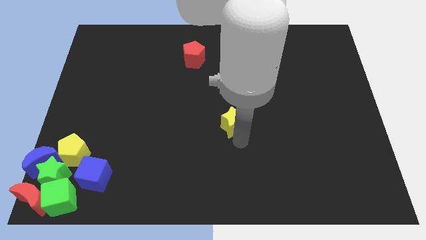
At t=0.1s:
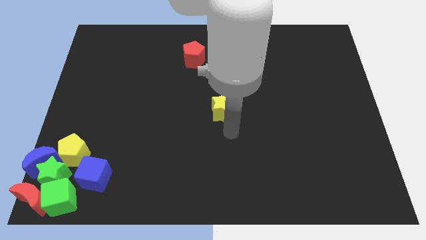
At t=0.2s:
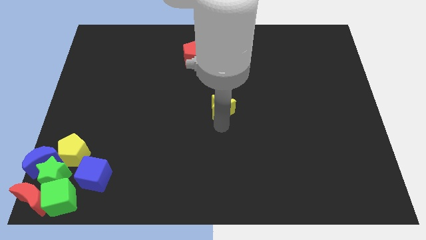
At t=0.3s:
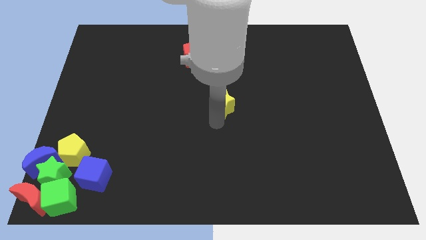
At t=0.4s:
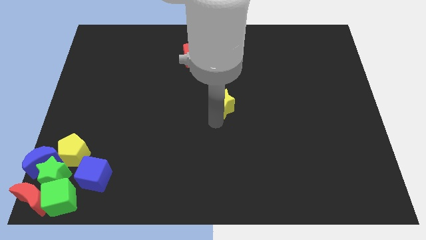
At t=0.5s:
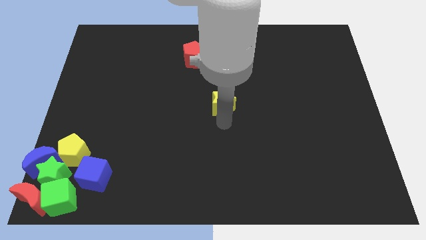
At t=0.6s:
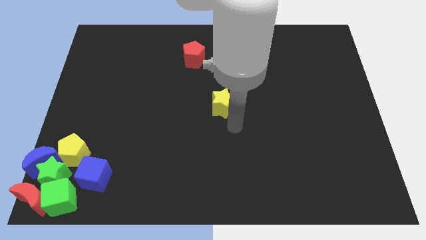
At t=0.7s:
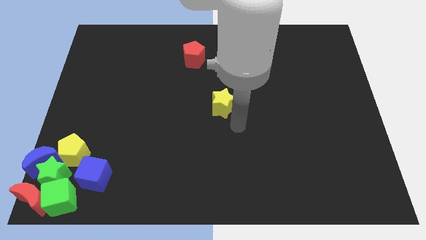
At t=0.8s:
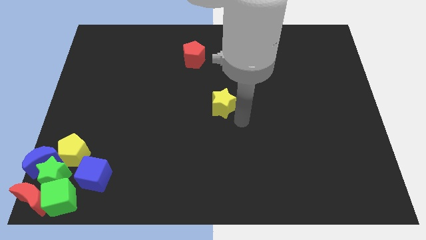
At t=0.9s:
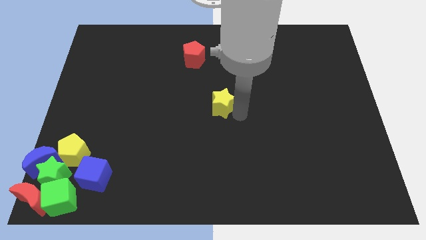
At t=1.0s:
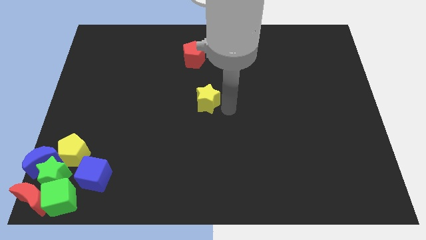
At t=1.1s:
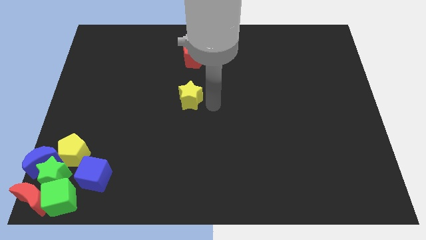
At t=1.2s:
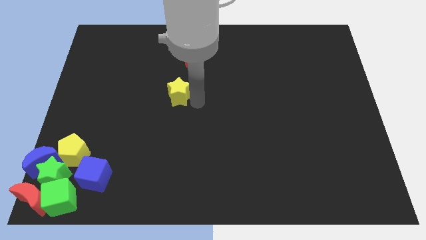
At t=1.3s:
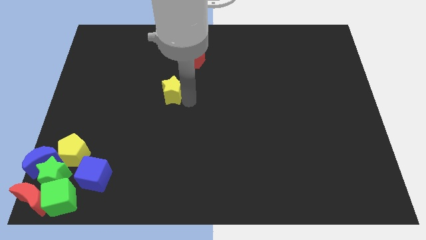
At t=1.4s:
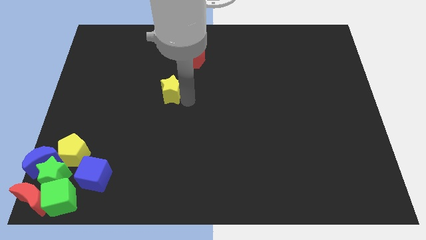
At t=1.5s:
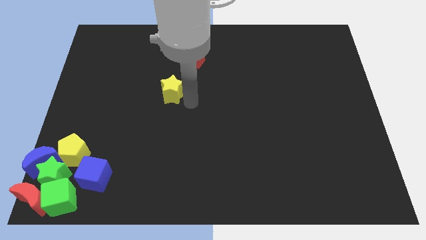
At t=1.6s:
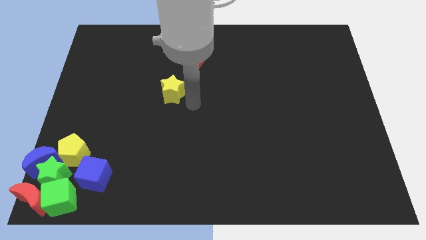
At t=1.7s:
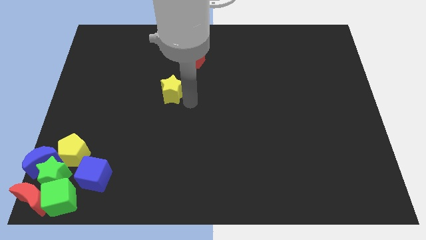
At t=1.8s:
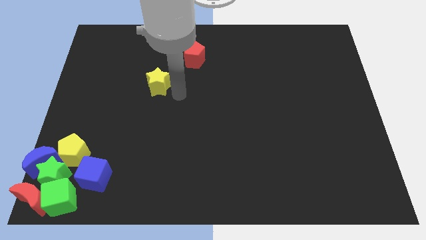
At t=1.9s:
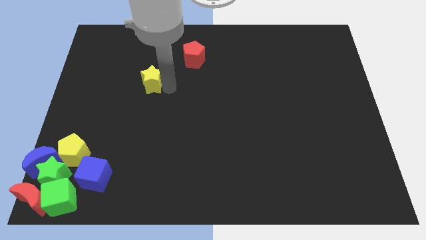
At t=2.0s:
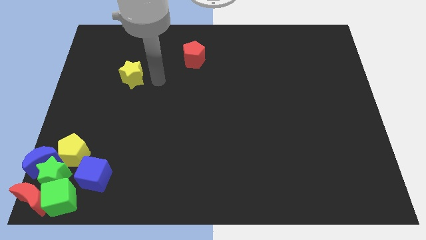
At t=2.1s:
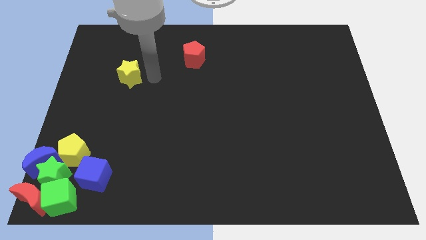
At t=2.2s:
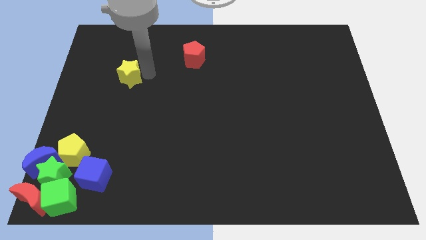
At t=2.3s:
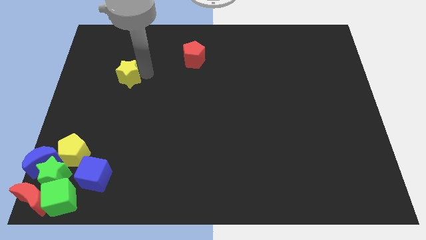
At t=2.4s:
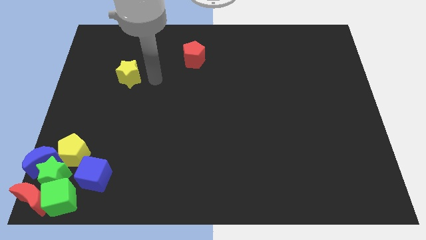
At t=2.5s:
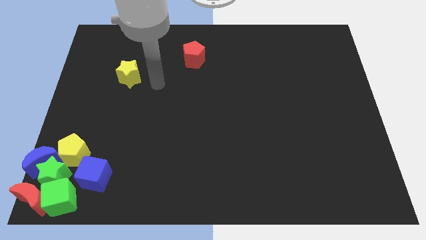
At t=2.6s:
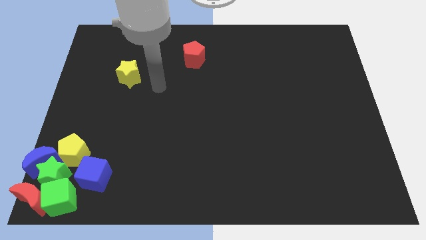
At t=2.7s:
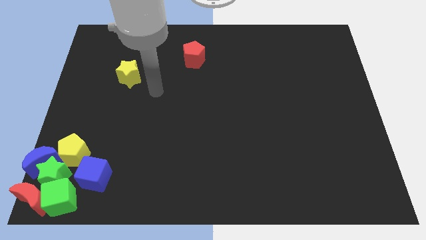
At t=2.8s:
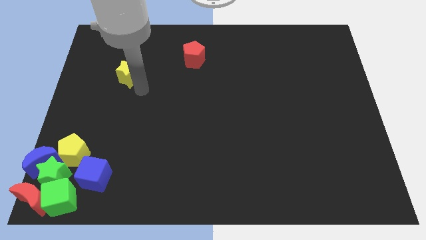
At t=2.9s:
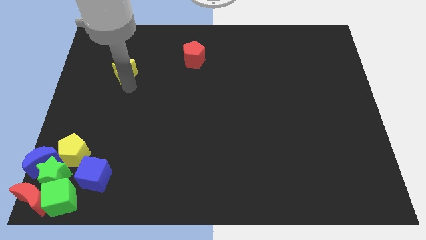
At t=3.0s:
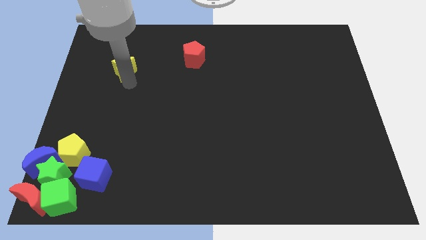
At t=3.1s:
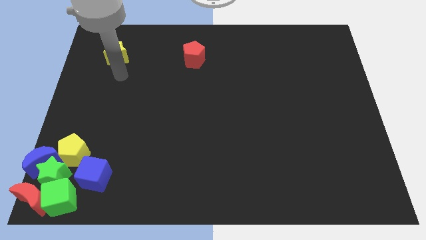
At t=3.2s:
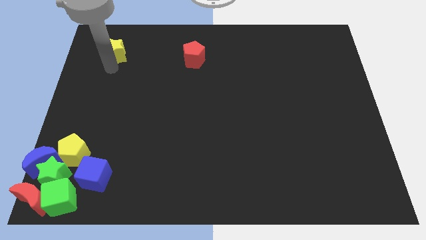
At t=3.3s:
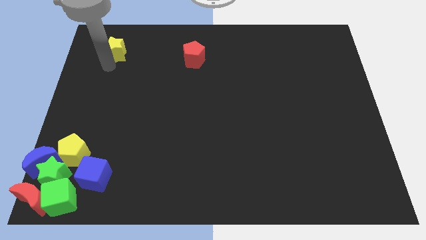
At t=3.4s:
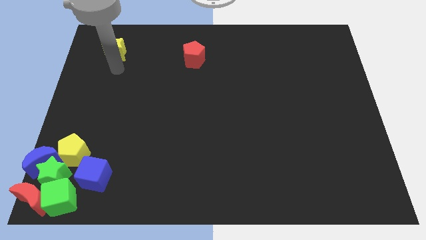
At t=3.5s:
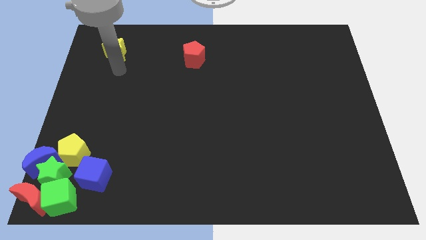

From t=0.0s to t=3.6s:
move the yellow star left to the red pentagon

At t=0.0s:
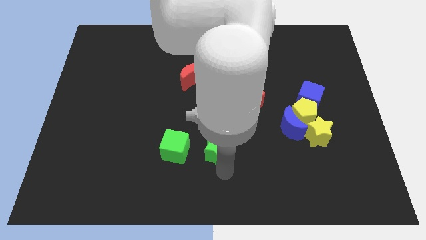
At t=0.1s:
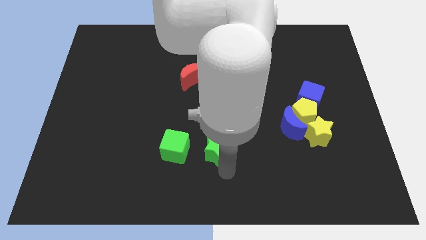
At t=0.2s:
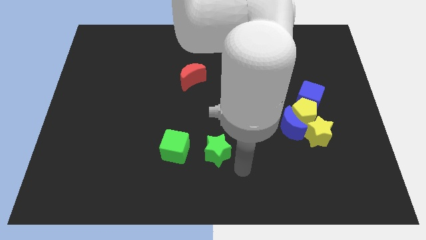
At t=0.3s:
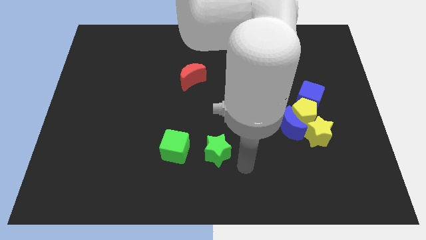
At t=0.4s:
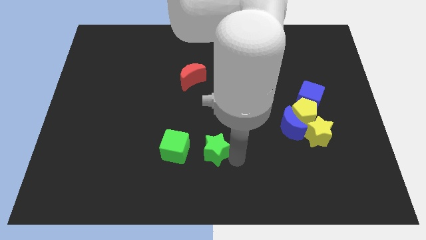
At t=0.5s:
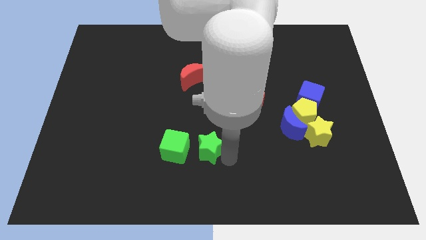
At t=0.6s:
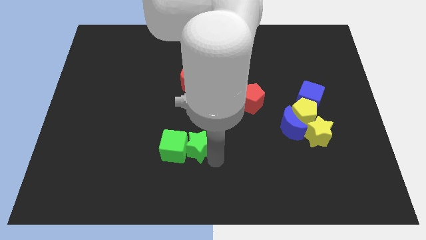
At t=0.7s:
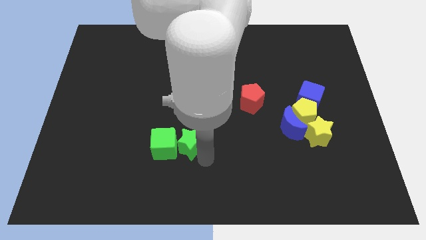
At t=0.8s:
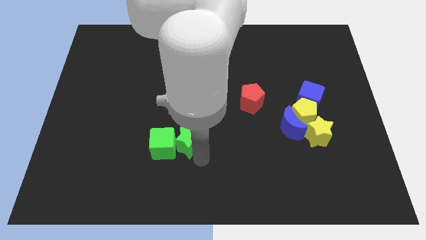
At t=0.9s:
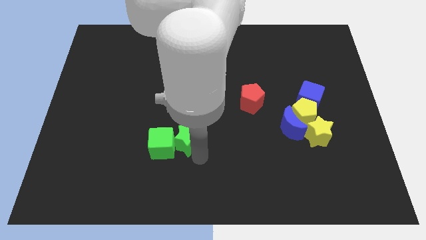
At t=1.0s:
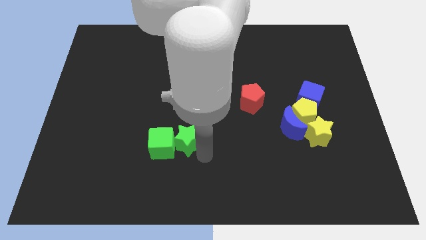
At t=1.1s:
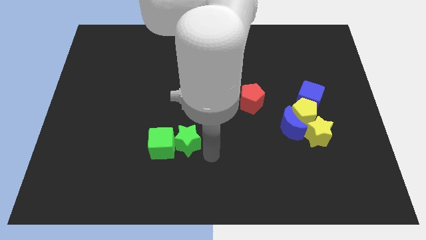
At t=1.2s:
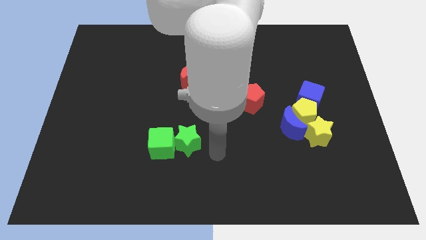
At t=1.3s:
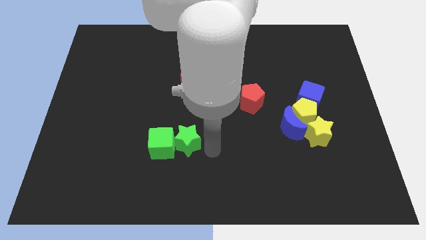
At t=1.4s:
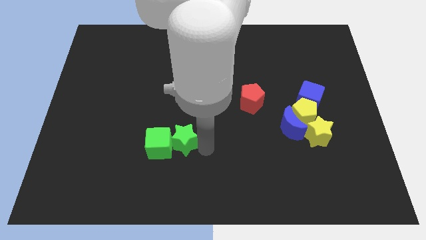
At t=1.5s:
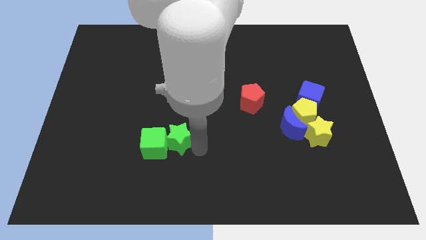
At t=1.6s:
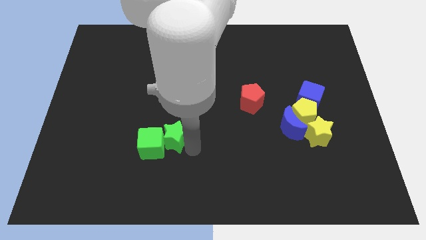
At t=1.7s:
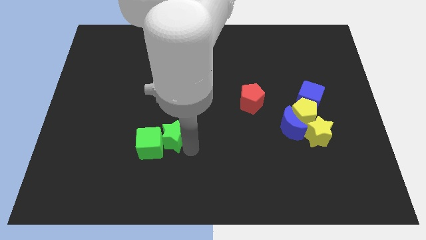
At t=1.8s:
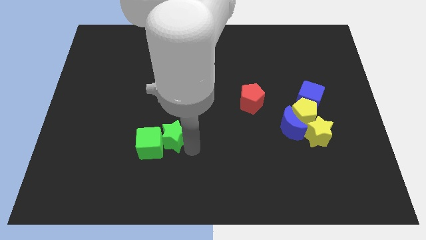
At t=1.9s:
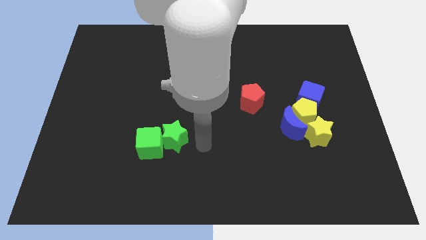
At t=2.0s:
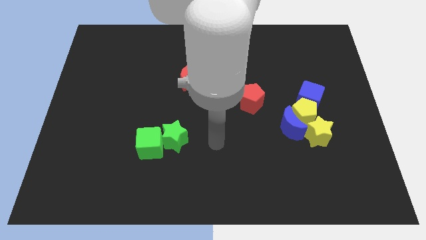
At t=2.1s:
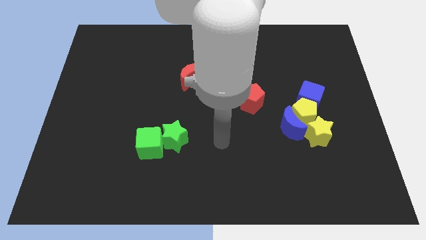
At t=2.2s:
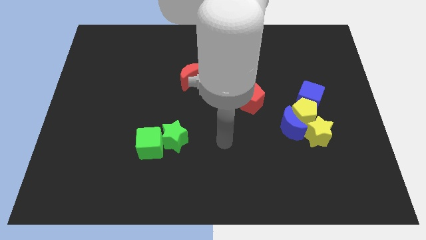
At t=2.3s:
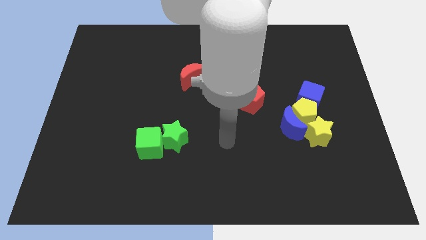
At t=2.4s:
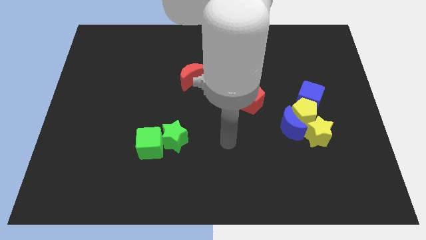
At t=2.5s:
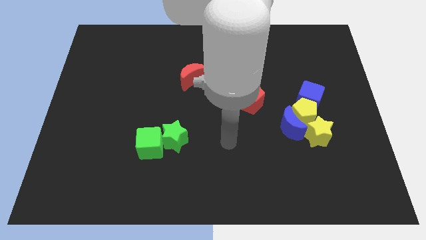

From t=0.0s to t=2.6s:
push the green star into the green cube

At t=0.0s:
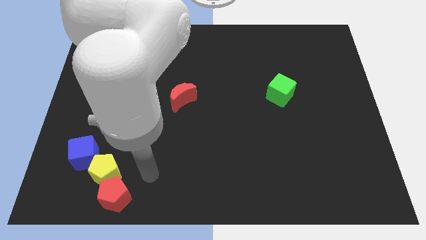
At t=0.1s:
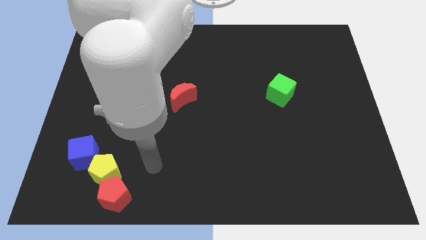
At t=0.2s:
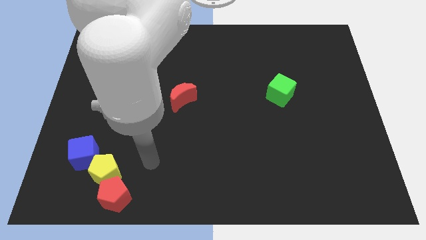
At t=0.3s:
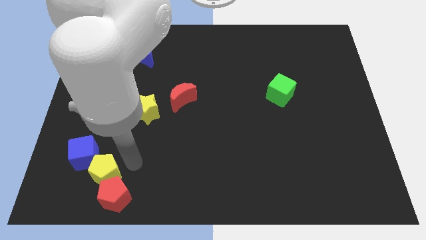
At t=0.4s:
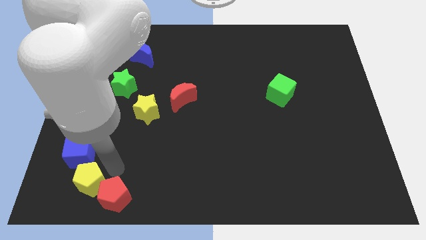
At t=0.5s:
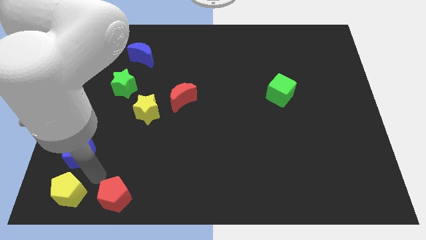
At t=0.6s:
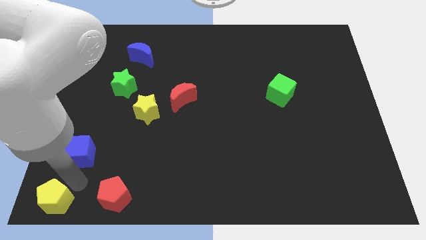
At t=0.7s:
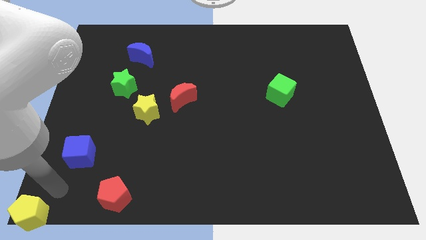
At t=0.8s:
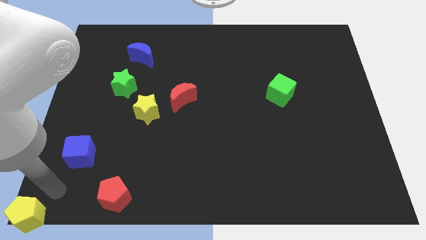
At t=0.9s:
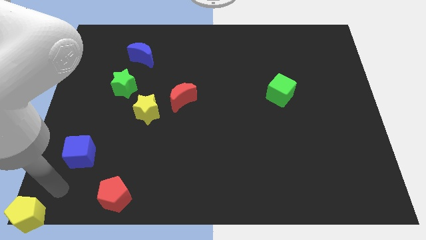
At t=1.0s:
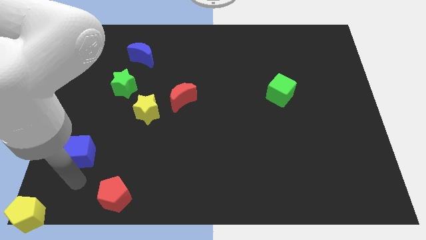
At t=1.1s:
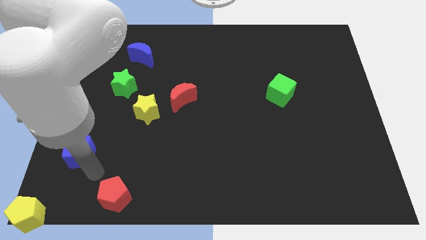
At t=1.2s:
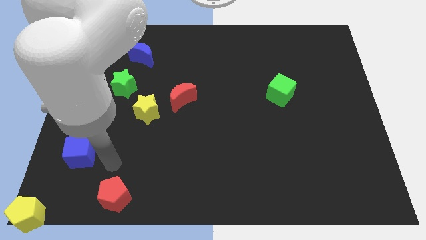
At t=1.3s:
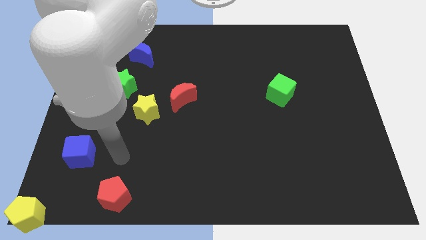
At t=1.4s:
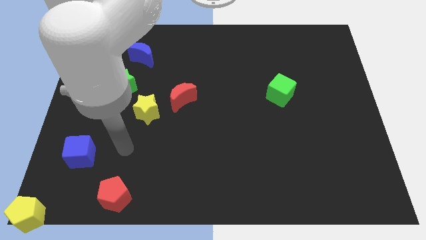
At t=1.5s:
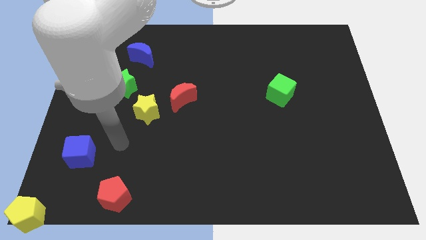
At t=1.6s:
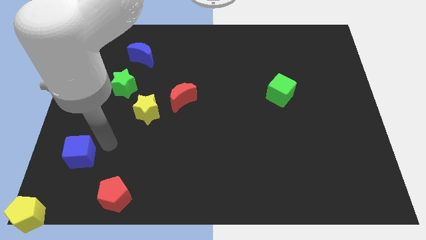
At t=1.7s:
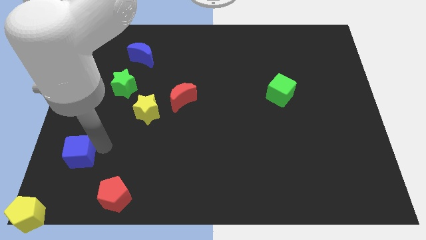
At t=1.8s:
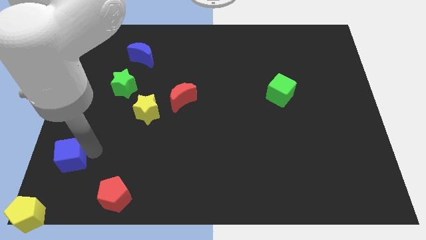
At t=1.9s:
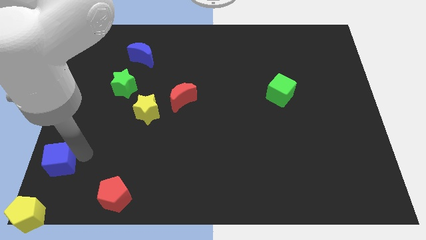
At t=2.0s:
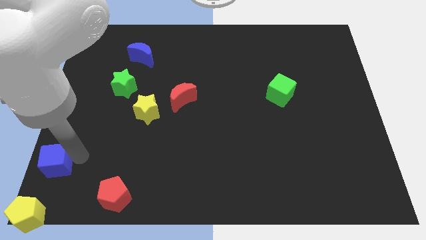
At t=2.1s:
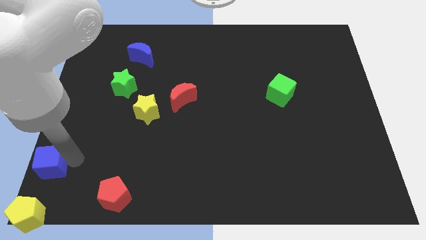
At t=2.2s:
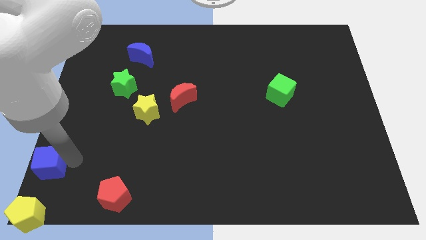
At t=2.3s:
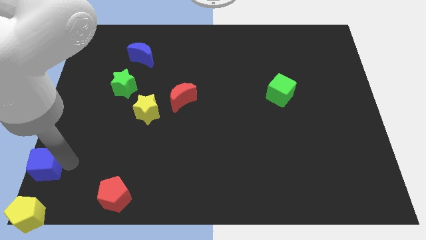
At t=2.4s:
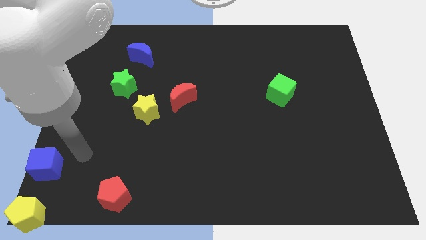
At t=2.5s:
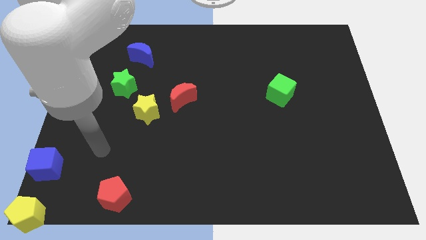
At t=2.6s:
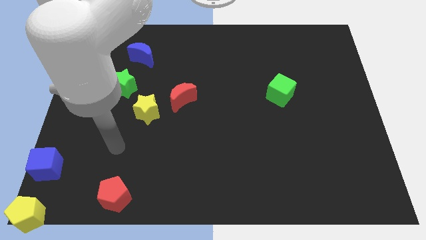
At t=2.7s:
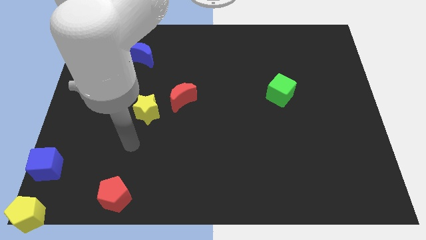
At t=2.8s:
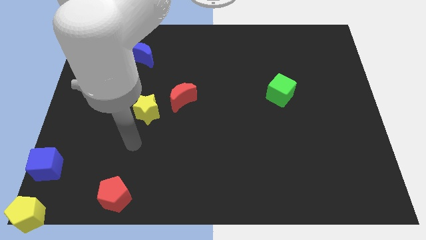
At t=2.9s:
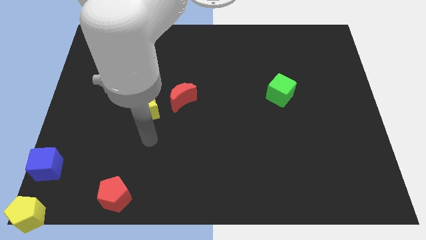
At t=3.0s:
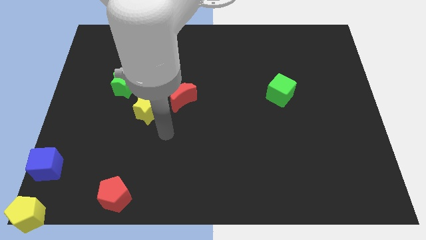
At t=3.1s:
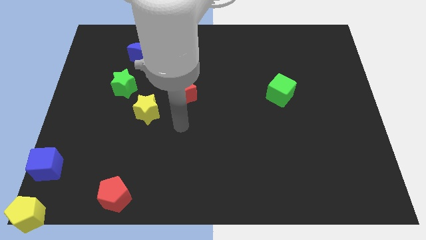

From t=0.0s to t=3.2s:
separate yellow pentagon and blue cube and red pentagon
